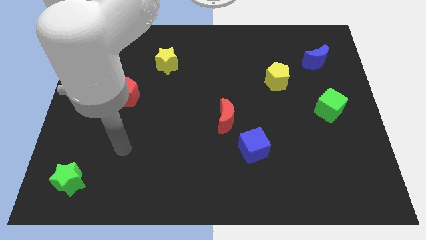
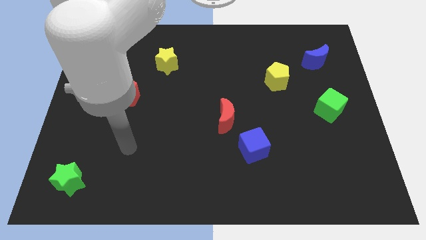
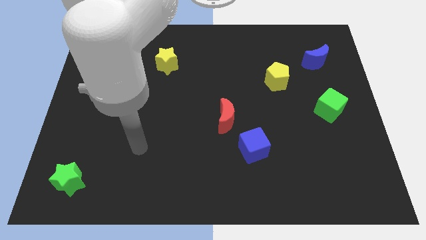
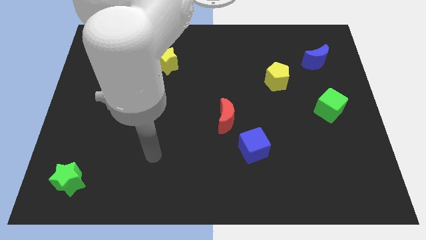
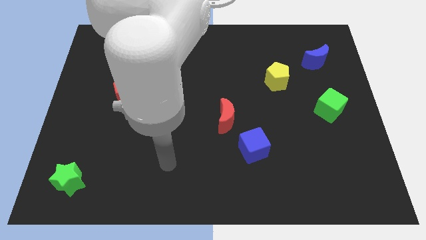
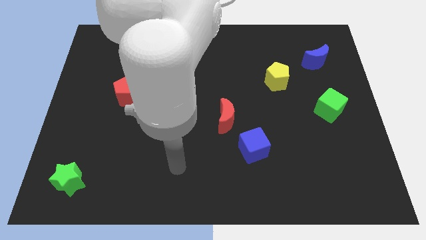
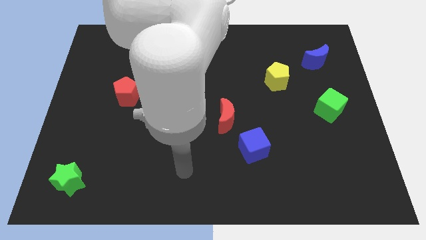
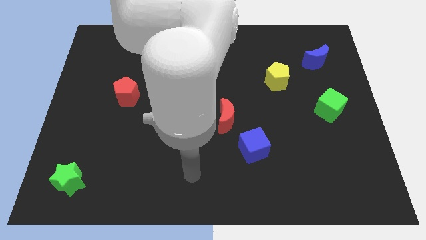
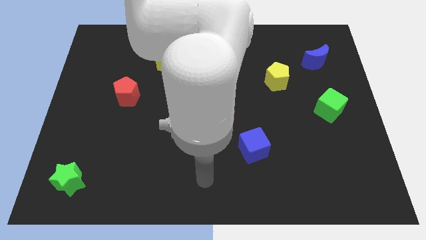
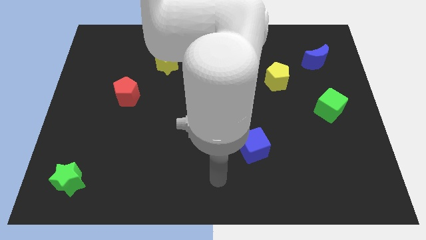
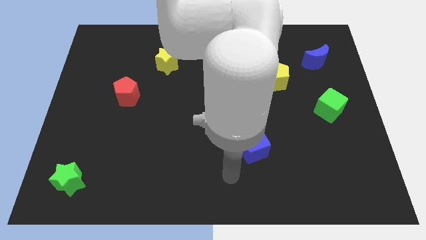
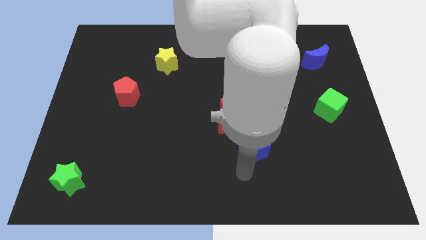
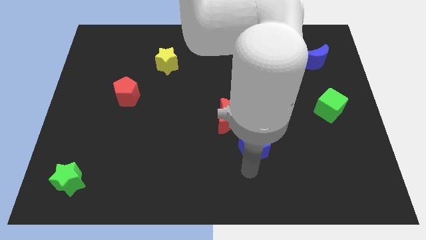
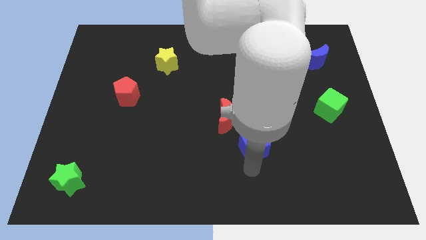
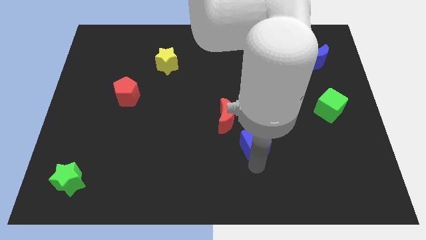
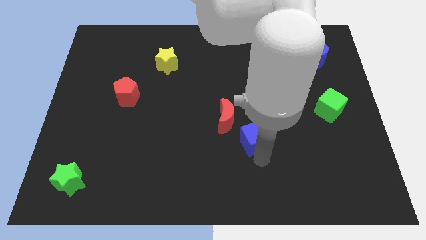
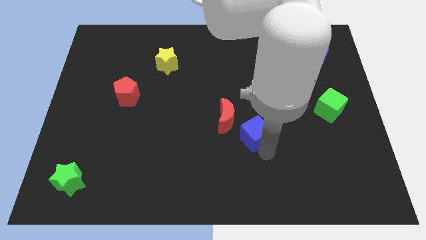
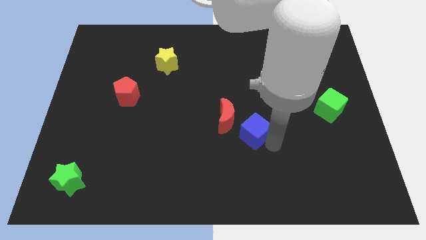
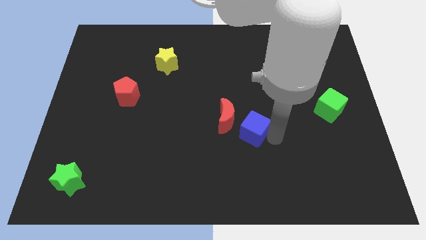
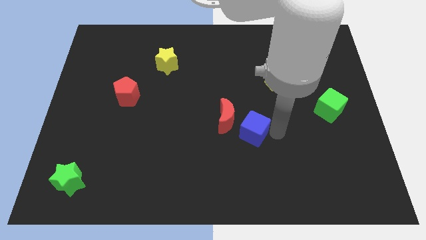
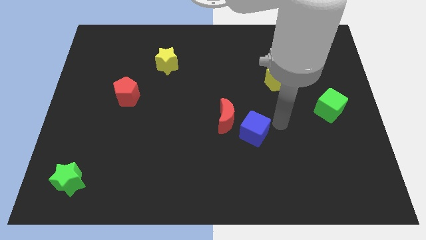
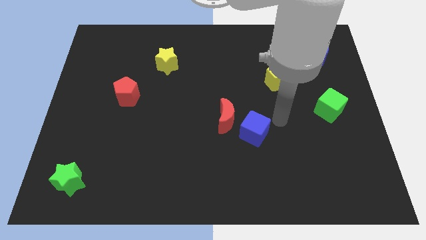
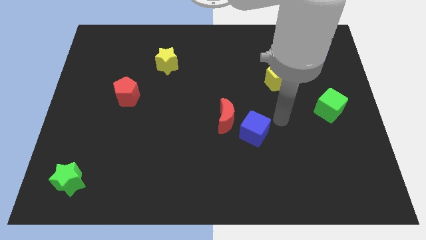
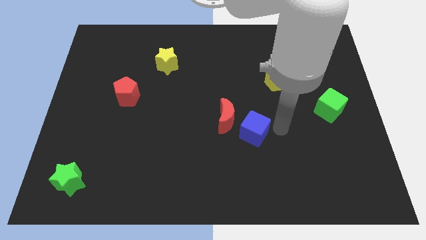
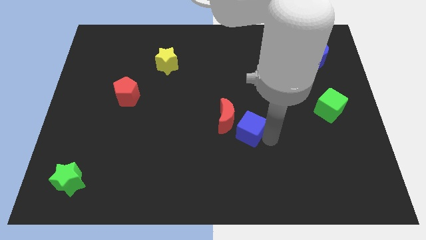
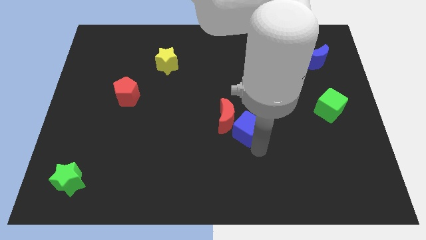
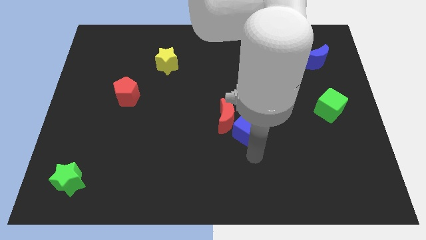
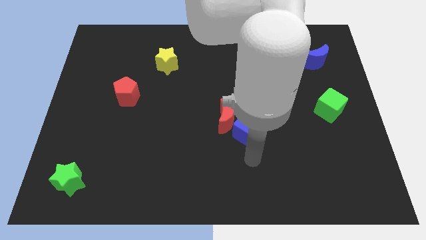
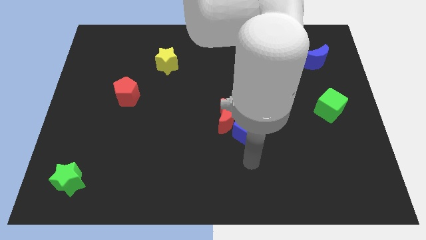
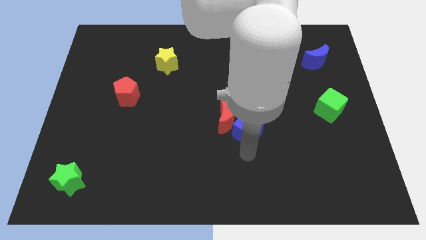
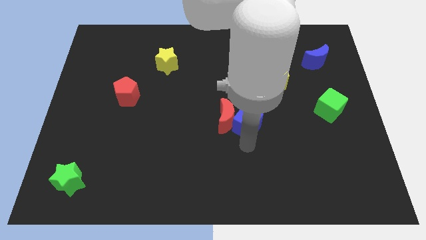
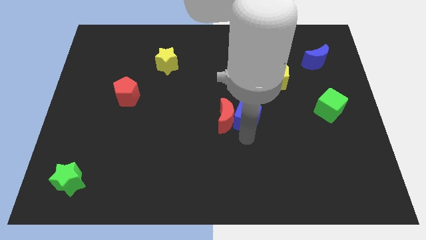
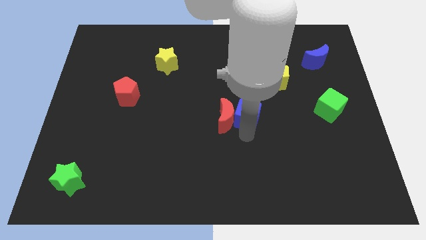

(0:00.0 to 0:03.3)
move the blue cube into the right side of the red crescent

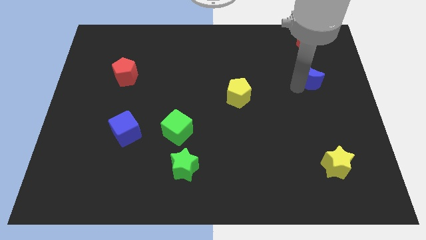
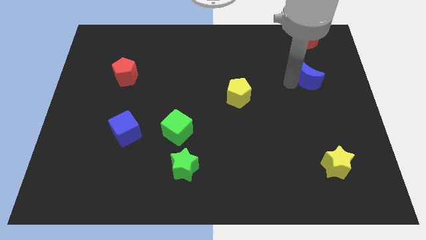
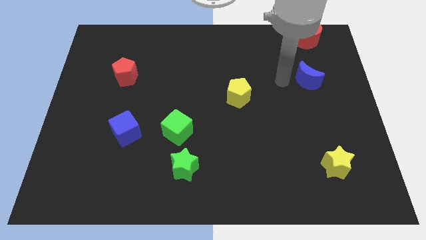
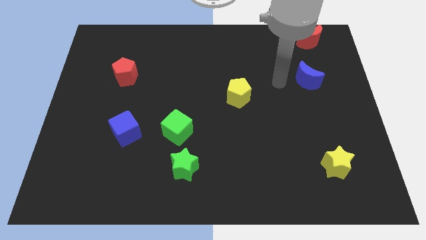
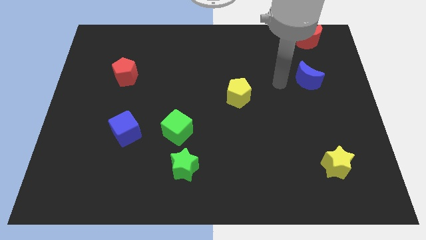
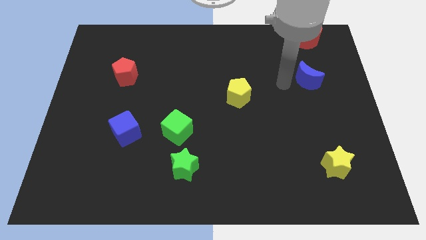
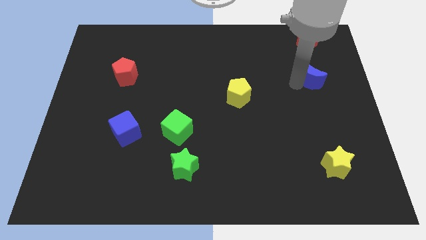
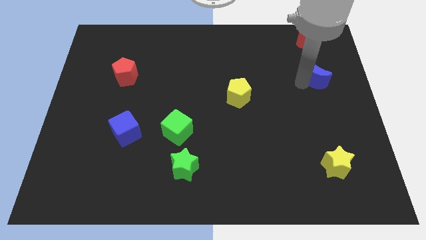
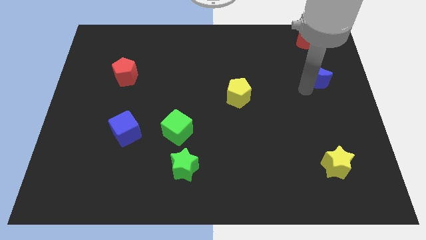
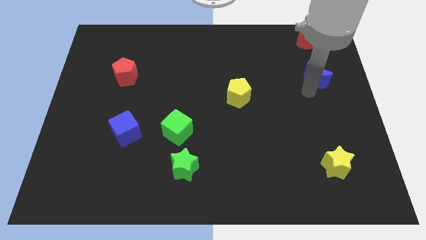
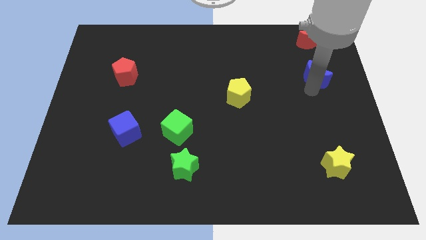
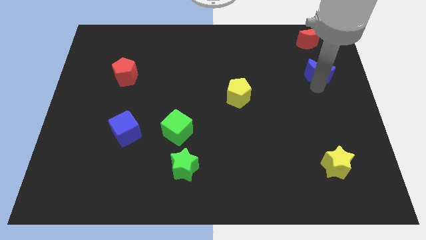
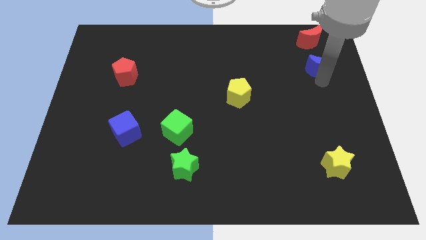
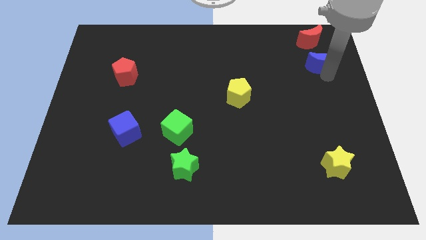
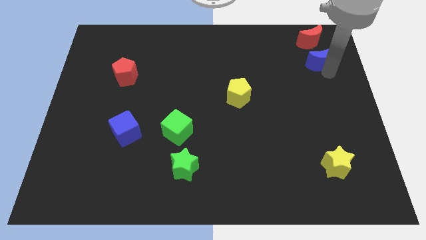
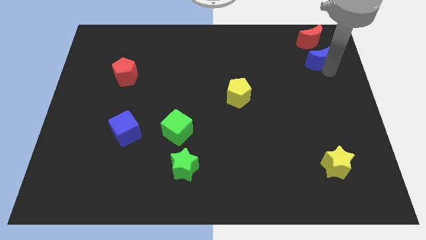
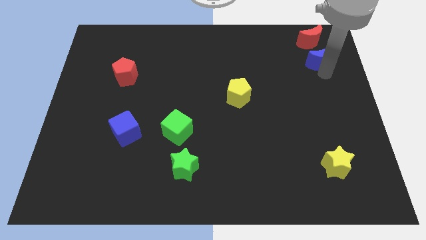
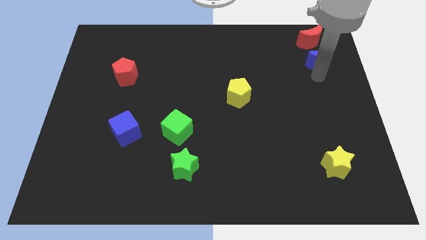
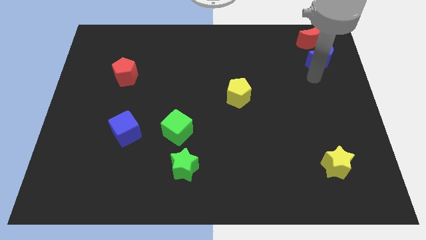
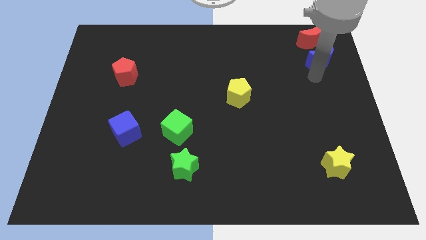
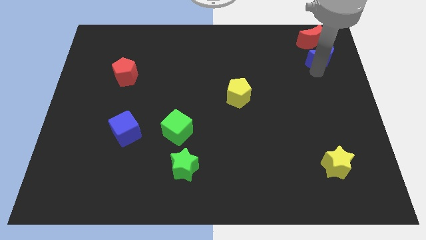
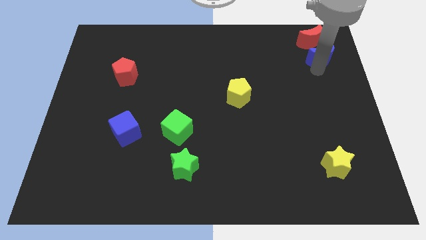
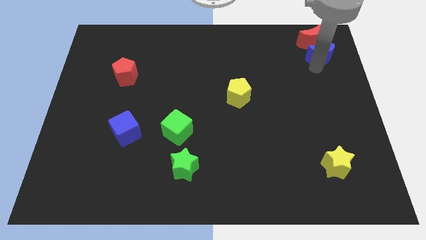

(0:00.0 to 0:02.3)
push the blue crescent to the bottom of the red crescent

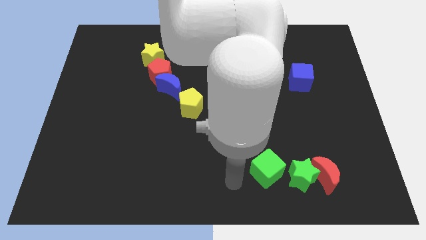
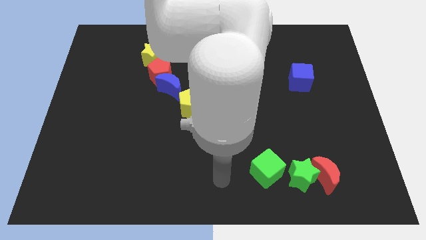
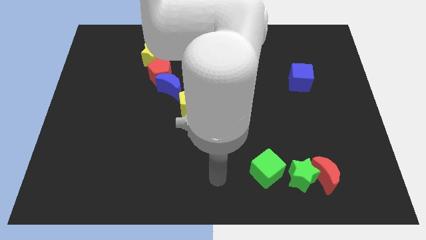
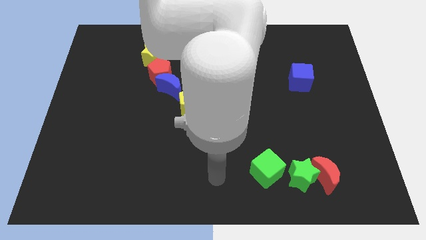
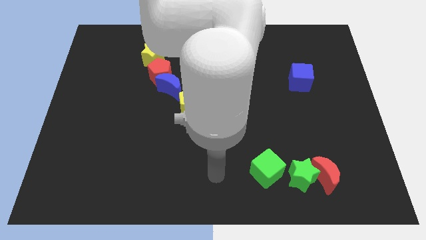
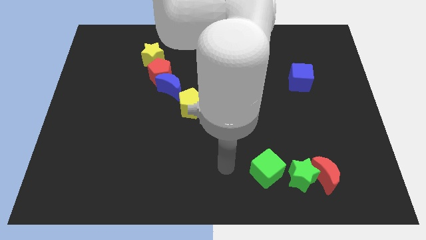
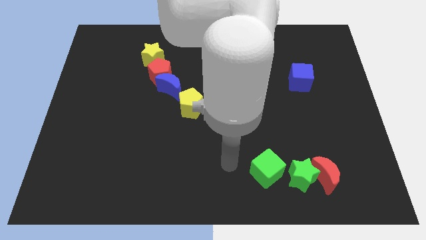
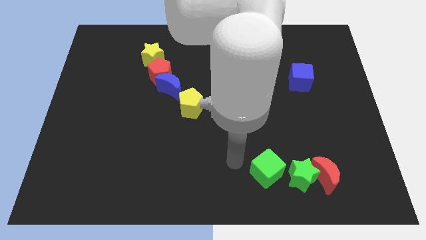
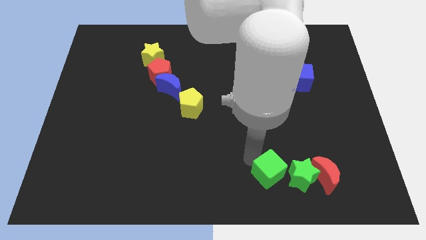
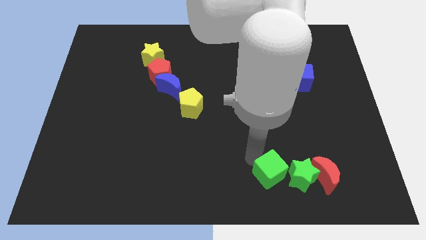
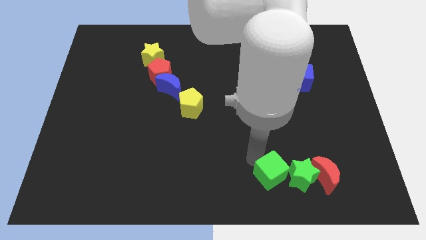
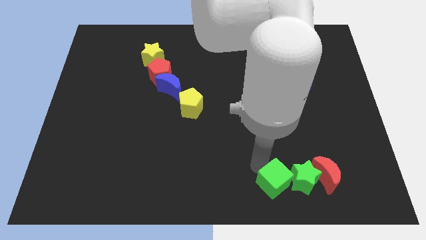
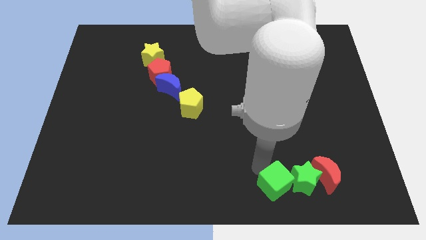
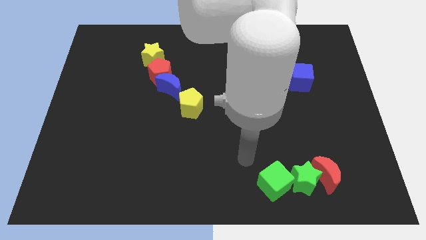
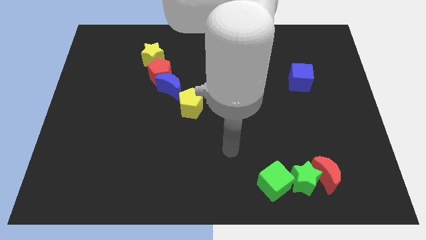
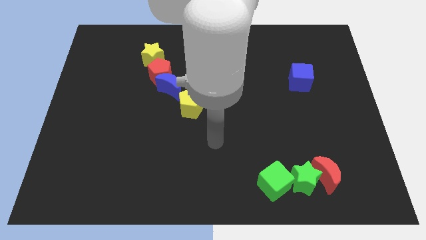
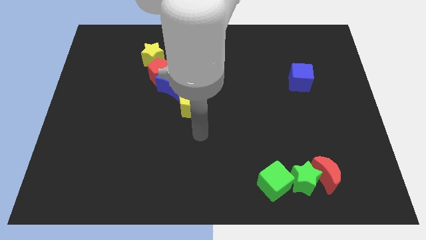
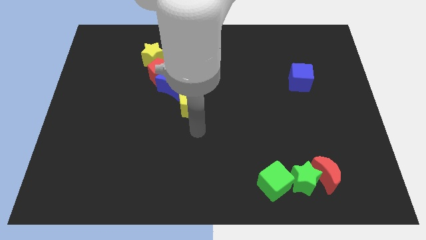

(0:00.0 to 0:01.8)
push the green cube into the green star

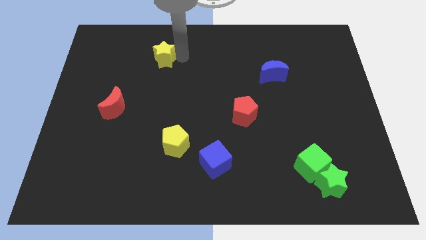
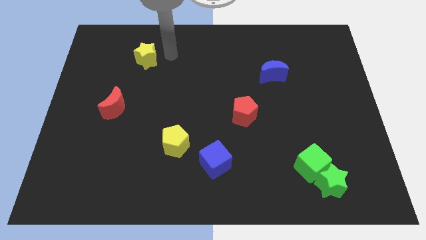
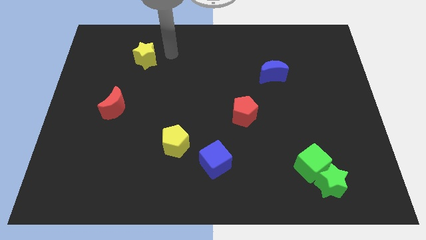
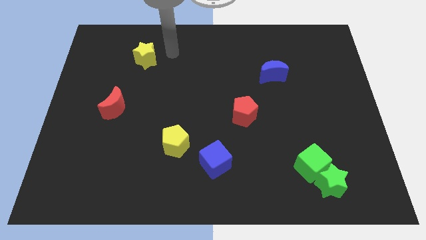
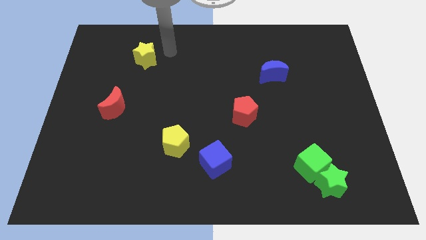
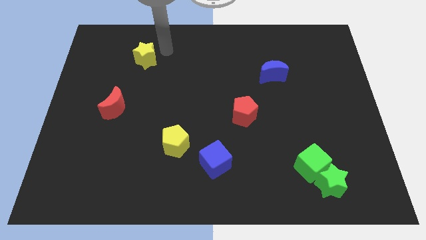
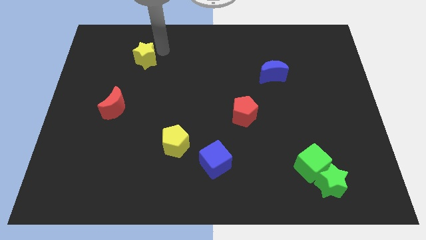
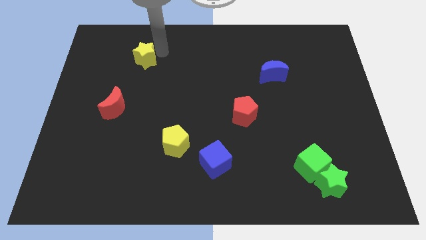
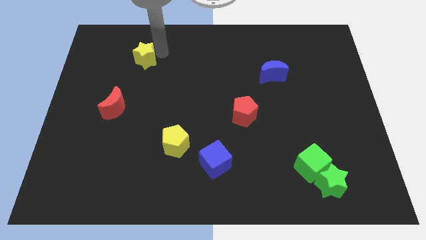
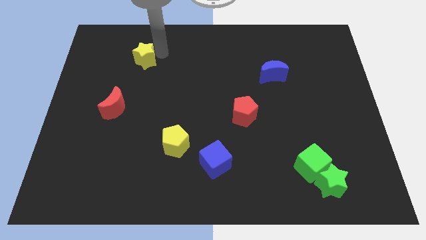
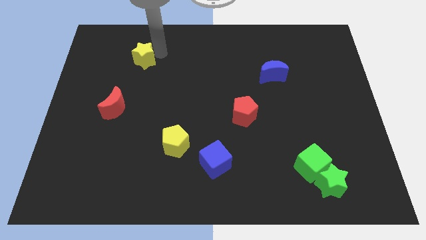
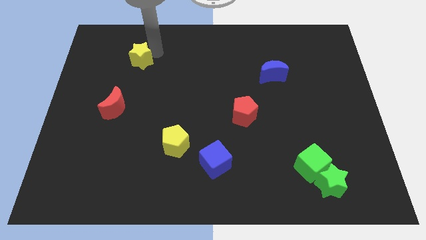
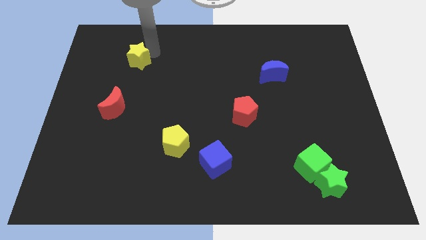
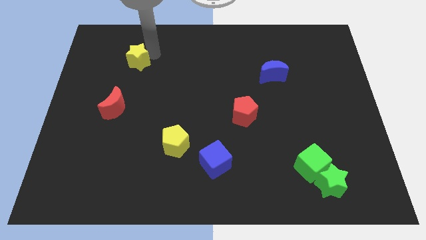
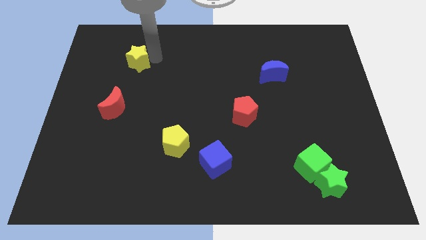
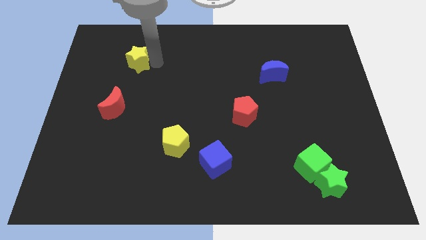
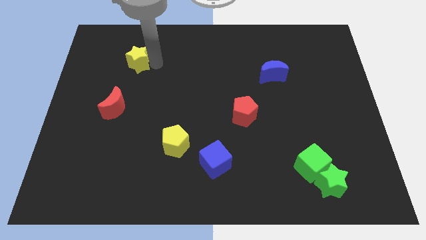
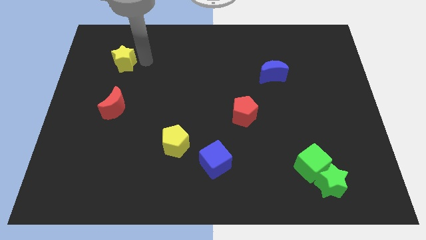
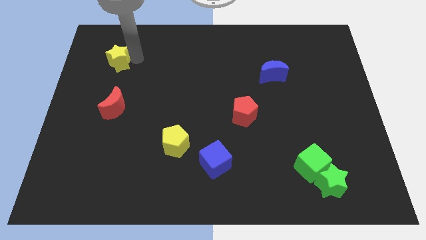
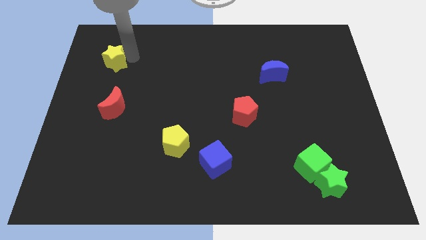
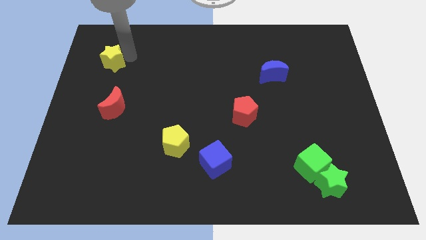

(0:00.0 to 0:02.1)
put the yellow star vertically above the red moon
